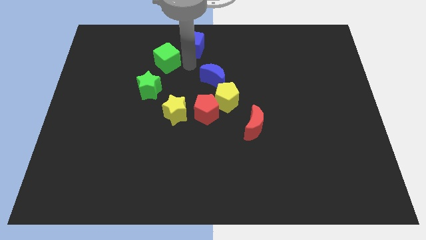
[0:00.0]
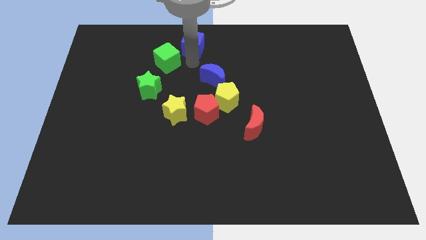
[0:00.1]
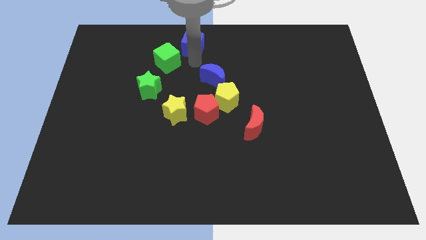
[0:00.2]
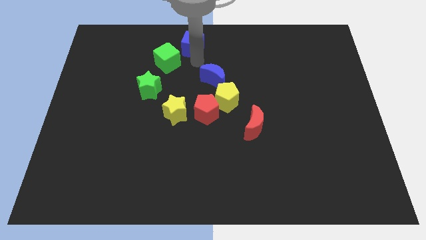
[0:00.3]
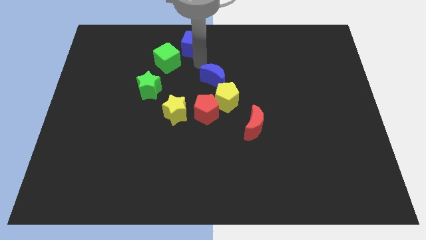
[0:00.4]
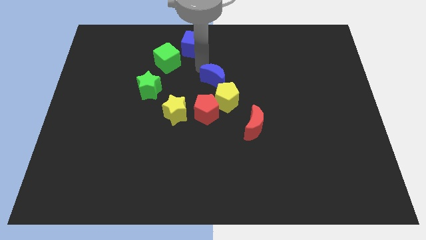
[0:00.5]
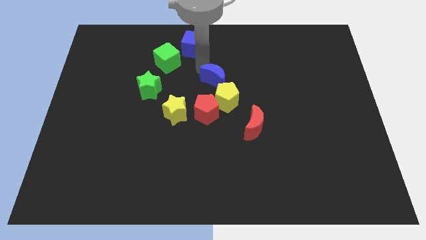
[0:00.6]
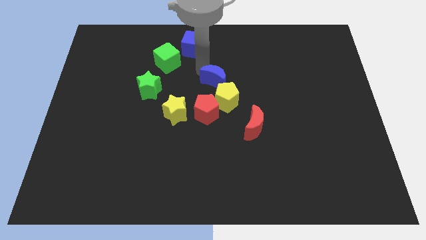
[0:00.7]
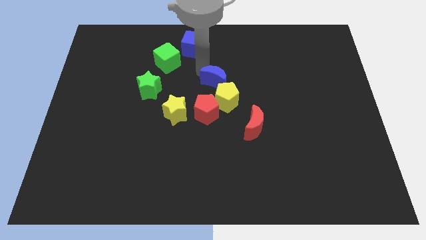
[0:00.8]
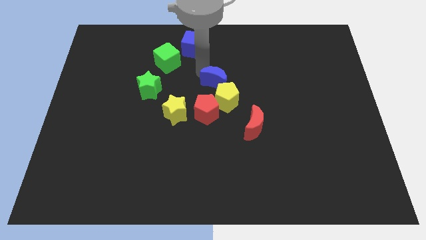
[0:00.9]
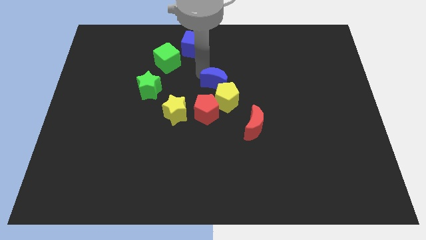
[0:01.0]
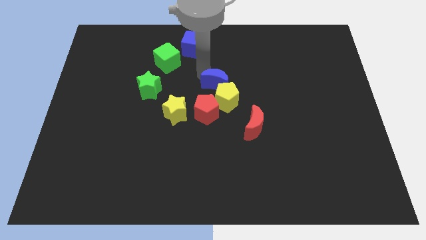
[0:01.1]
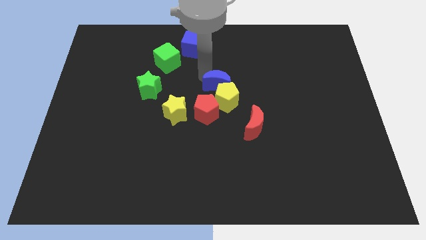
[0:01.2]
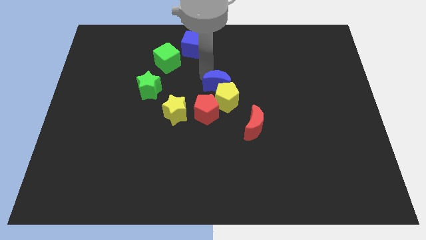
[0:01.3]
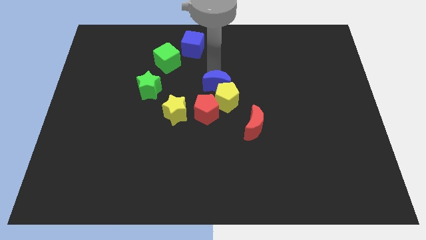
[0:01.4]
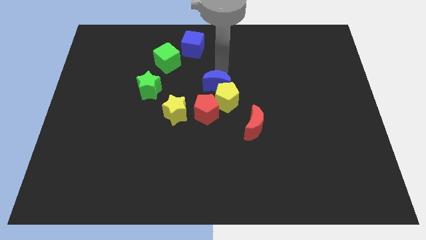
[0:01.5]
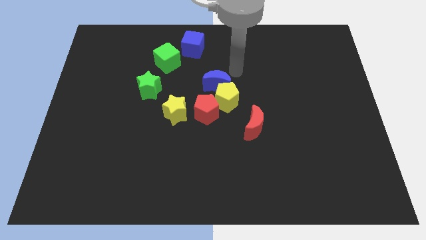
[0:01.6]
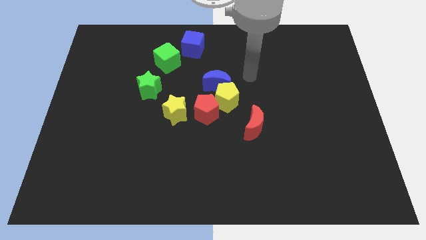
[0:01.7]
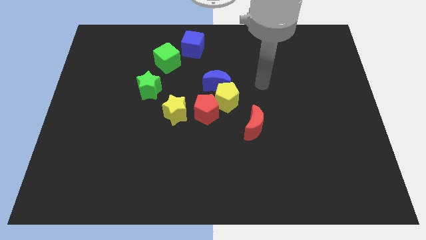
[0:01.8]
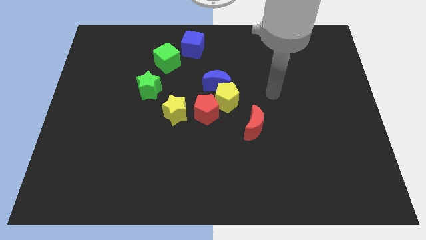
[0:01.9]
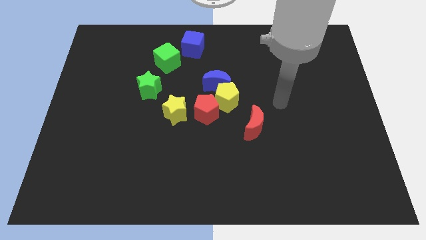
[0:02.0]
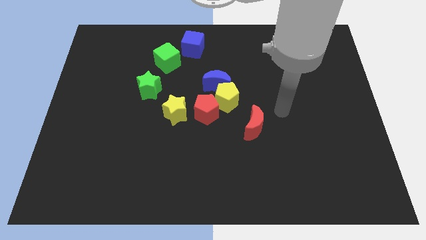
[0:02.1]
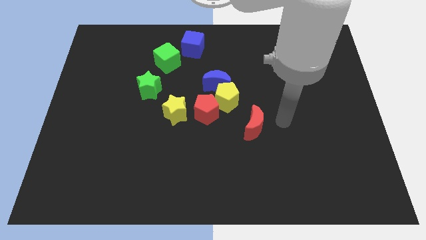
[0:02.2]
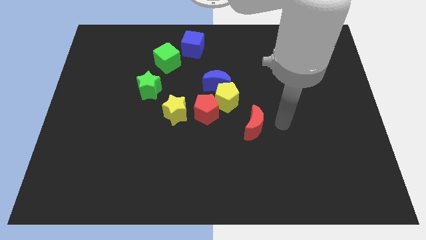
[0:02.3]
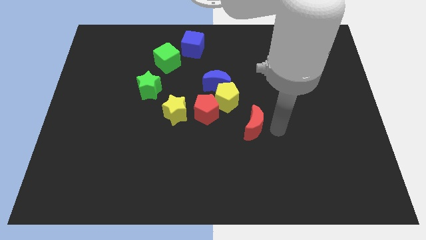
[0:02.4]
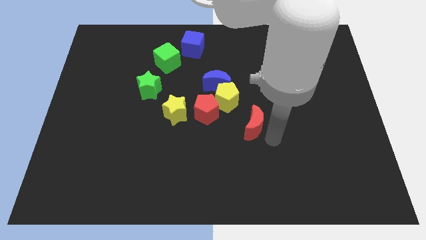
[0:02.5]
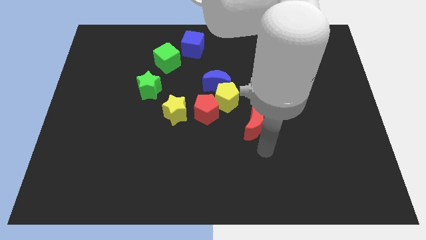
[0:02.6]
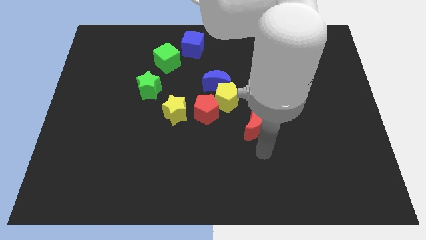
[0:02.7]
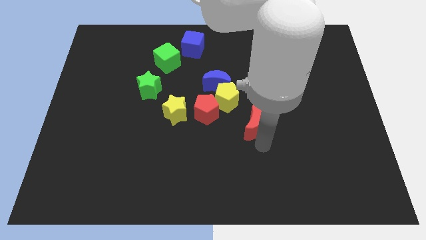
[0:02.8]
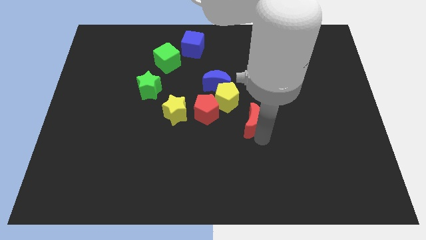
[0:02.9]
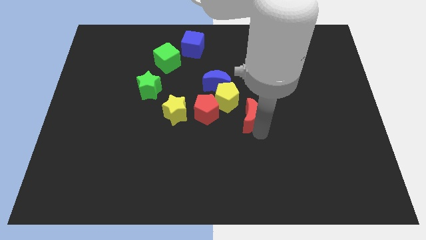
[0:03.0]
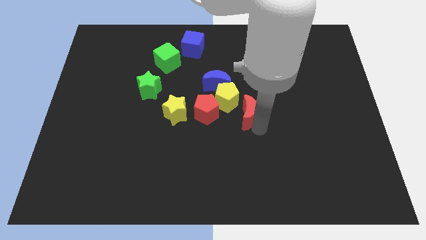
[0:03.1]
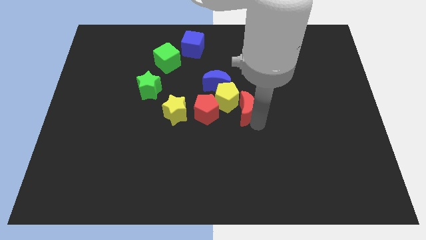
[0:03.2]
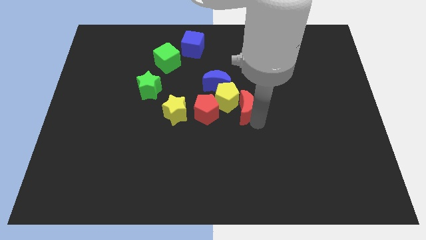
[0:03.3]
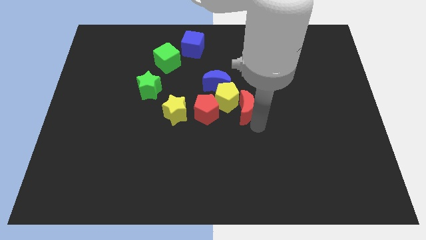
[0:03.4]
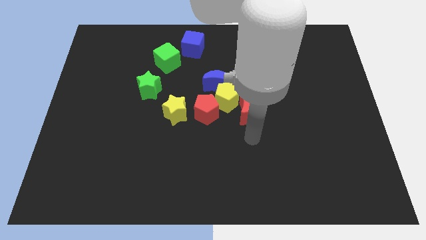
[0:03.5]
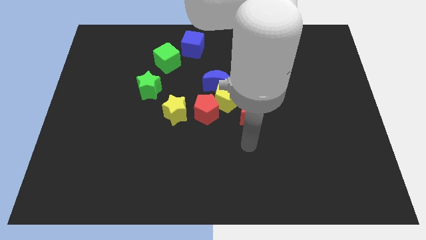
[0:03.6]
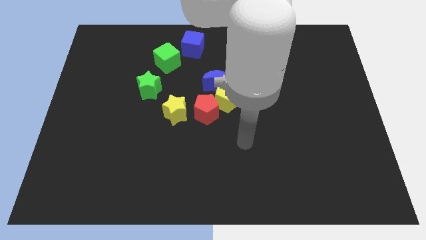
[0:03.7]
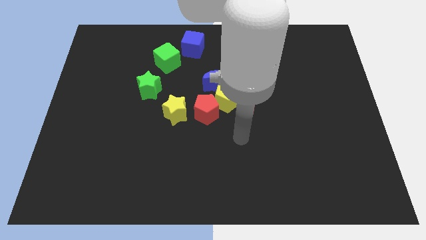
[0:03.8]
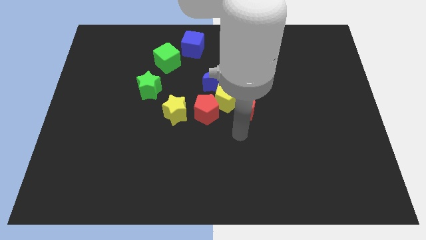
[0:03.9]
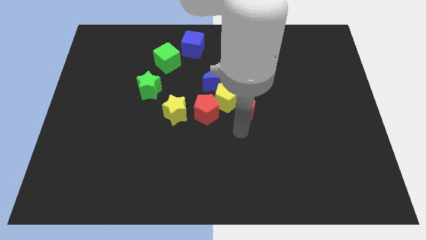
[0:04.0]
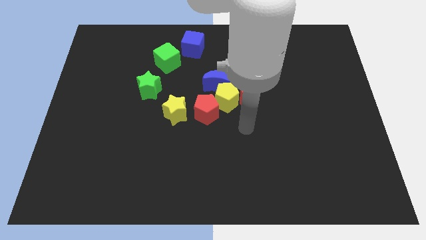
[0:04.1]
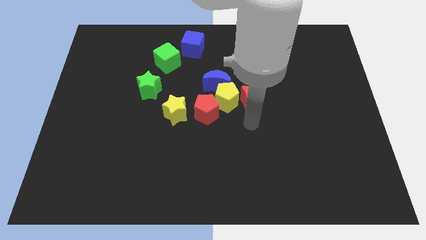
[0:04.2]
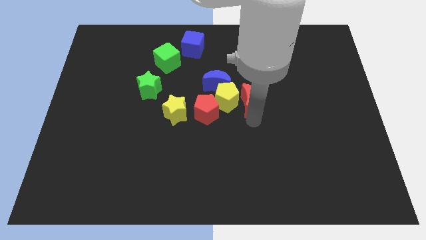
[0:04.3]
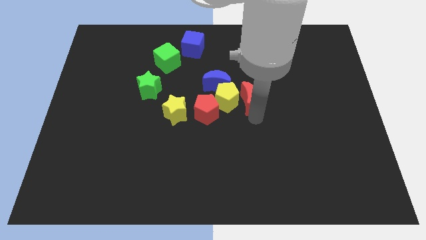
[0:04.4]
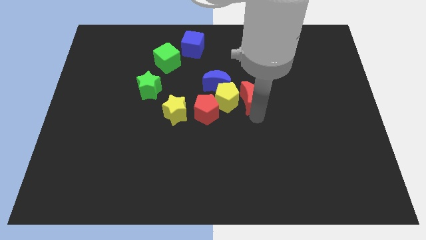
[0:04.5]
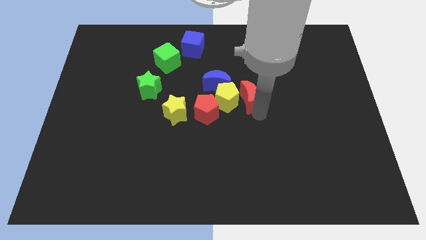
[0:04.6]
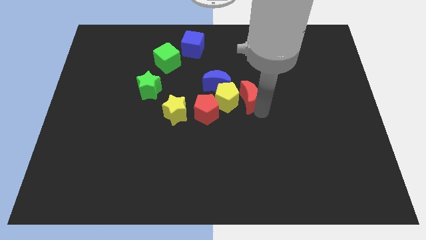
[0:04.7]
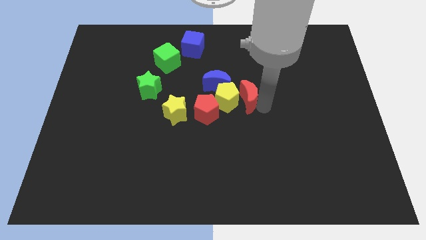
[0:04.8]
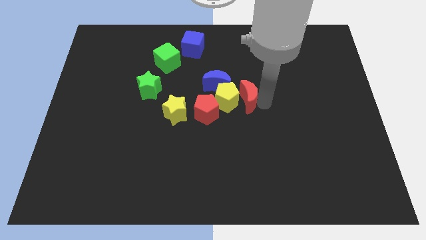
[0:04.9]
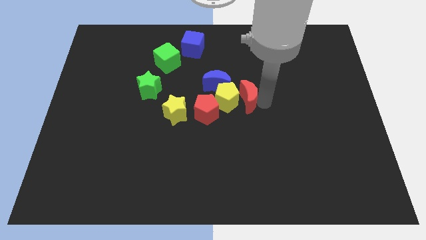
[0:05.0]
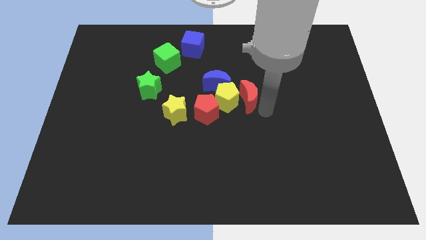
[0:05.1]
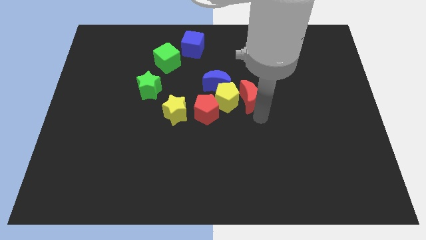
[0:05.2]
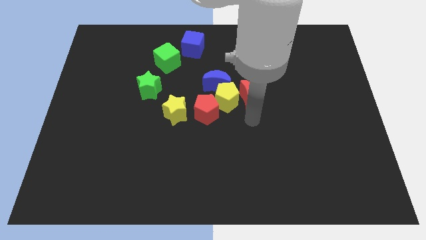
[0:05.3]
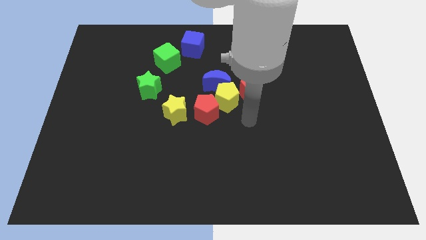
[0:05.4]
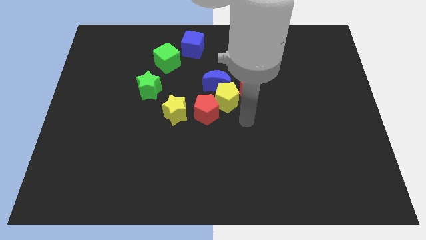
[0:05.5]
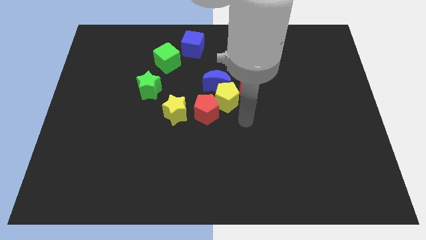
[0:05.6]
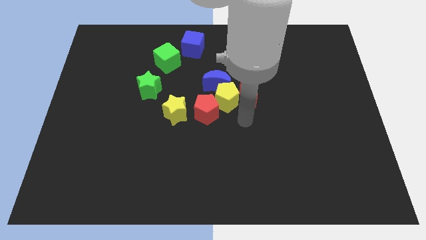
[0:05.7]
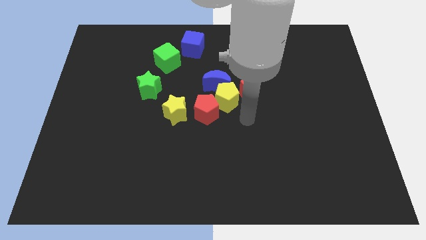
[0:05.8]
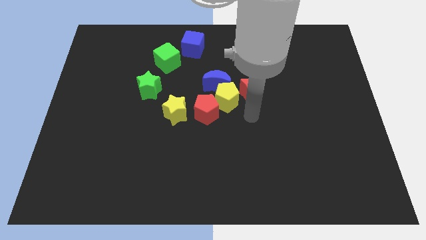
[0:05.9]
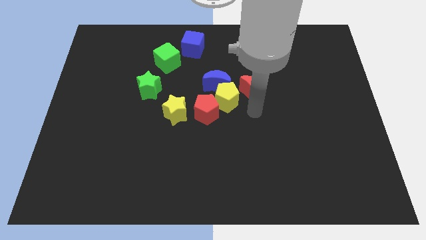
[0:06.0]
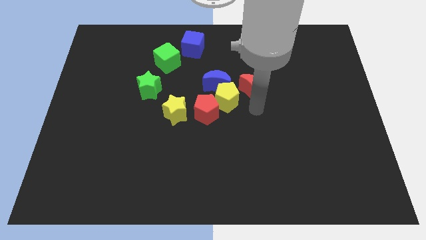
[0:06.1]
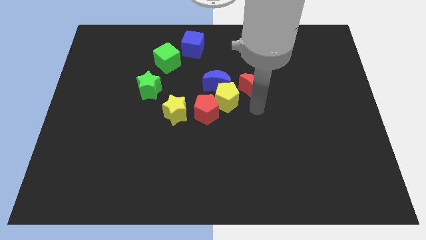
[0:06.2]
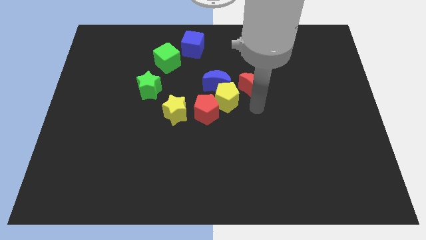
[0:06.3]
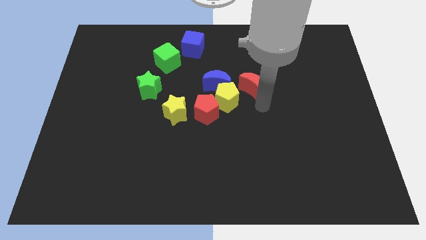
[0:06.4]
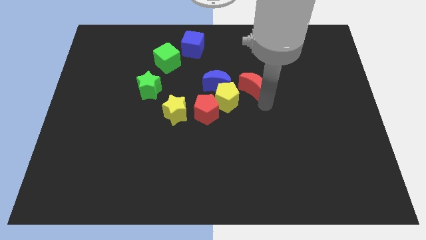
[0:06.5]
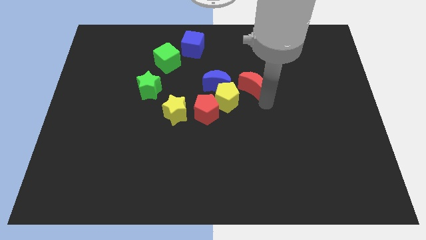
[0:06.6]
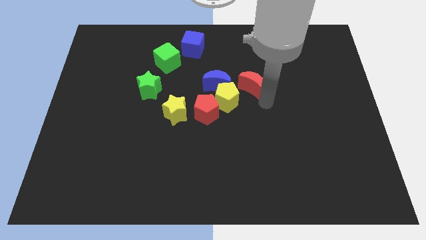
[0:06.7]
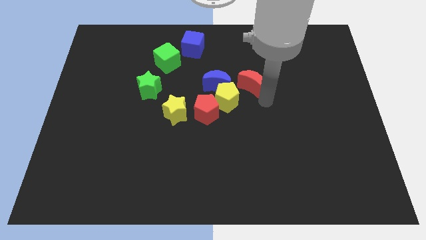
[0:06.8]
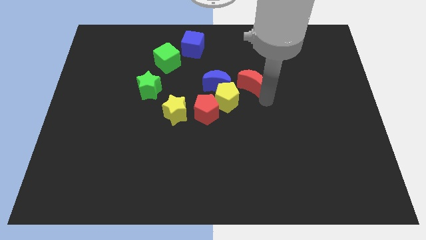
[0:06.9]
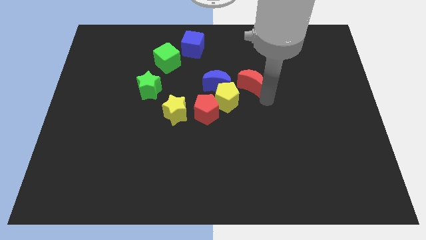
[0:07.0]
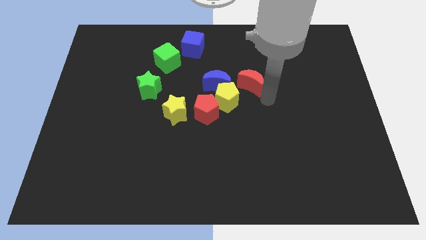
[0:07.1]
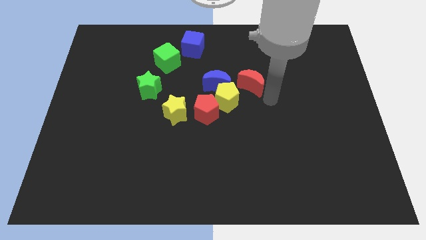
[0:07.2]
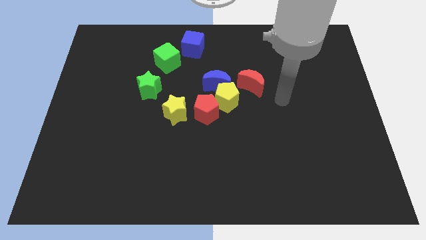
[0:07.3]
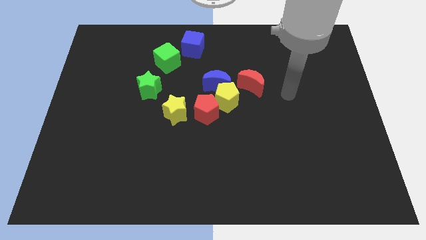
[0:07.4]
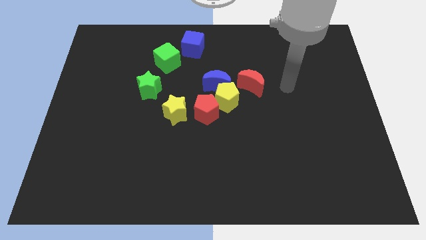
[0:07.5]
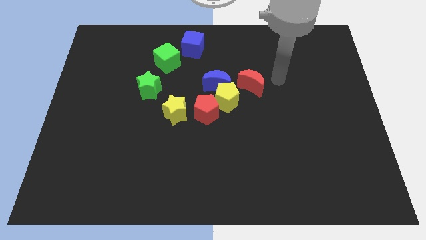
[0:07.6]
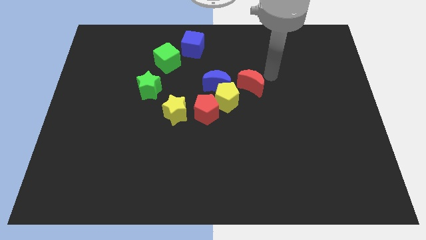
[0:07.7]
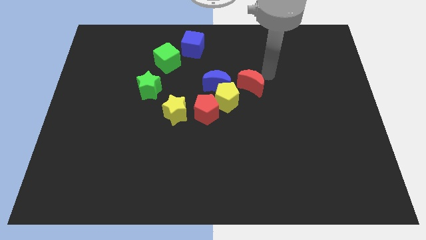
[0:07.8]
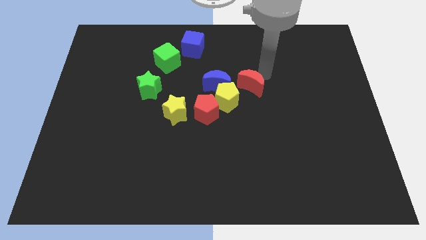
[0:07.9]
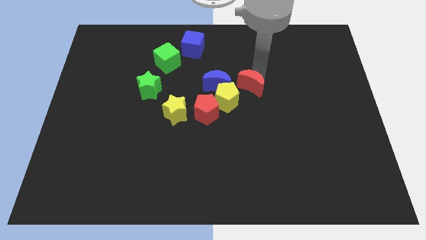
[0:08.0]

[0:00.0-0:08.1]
move the red crescent to the right side of the yellow pentagon

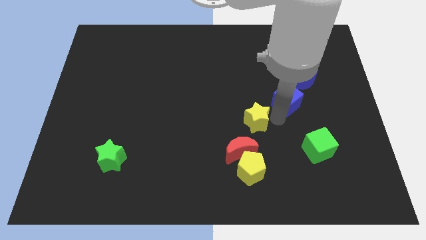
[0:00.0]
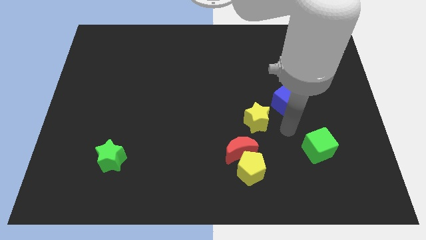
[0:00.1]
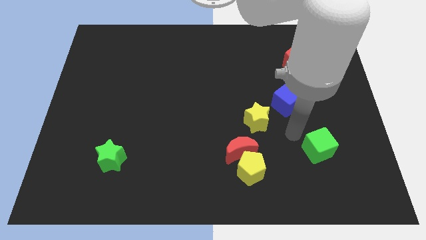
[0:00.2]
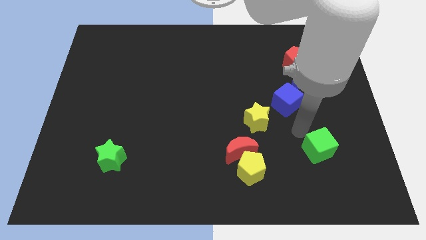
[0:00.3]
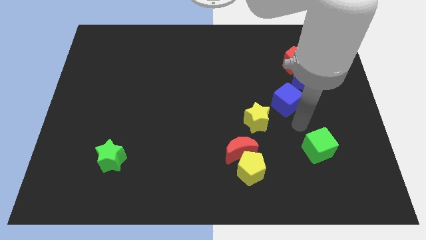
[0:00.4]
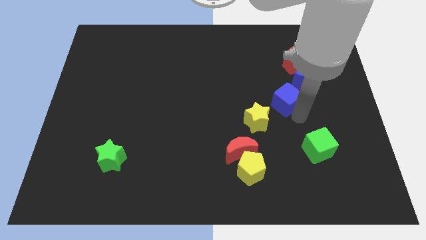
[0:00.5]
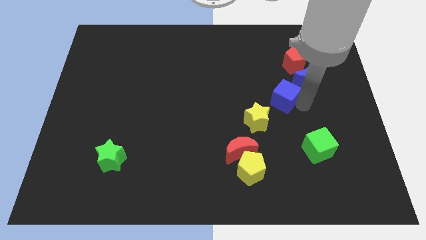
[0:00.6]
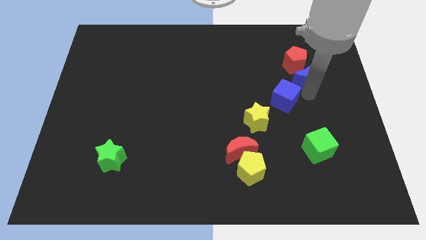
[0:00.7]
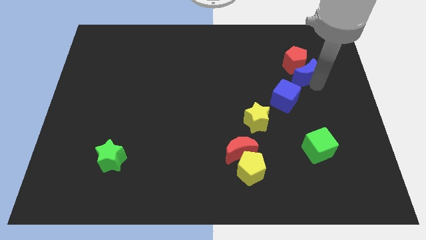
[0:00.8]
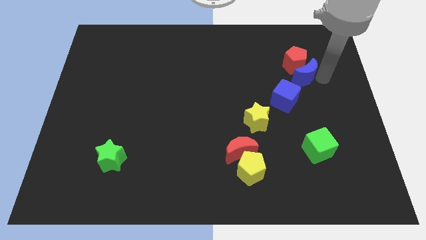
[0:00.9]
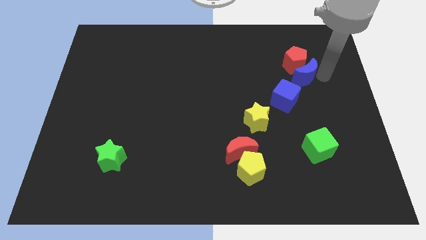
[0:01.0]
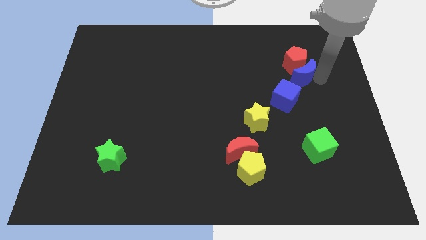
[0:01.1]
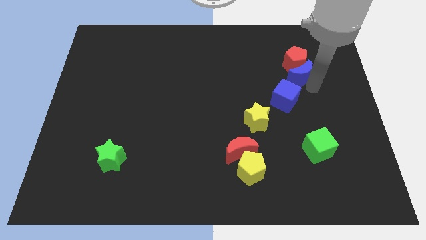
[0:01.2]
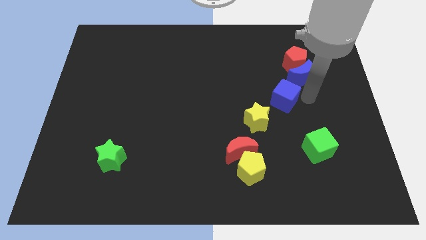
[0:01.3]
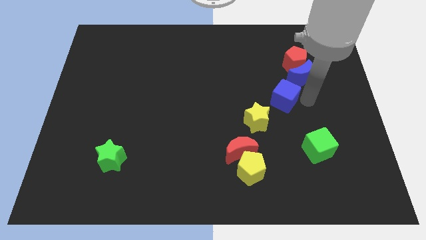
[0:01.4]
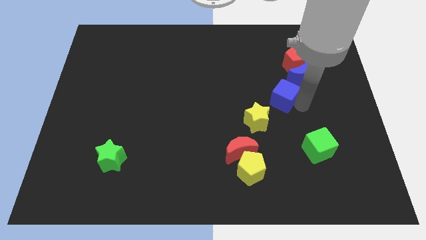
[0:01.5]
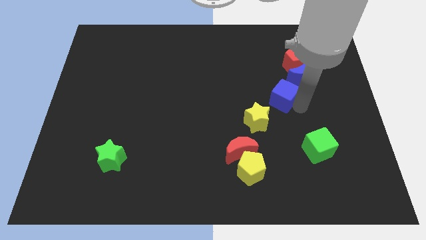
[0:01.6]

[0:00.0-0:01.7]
push the blue cube towards the top right of yellow star
